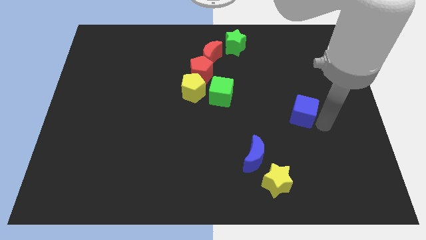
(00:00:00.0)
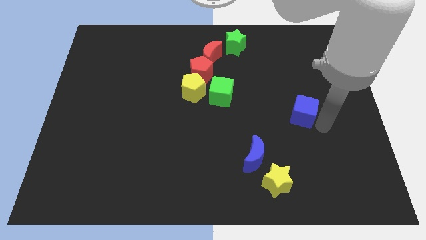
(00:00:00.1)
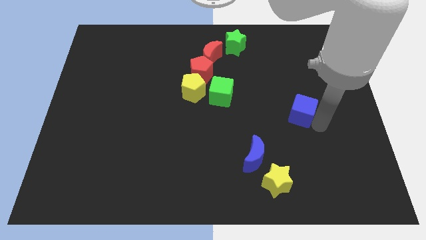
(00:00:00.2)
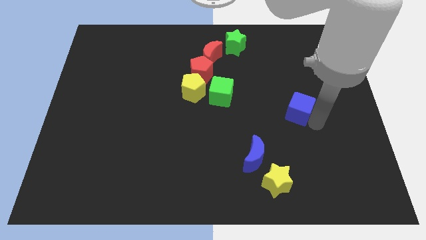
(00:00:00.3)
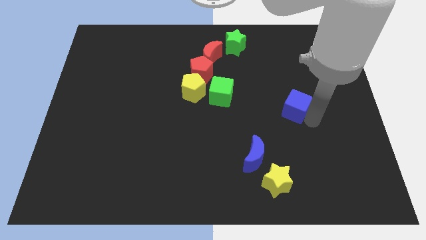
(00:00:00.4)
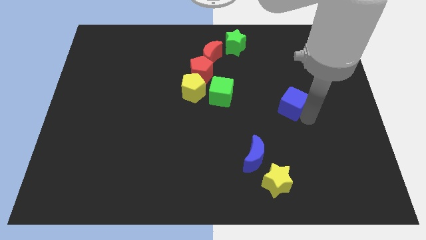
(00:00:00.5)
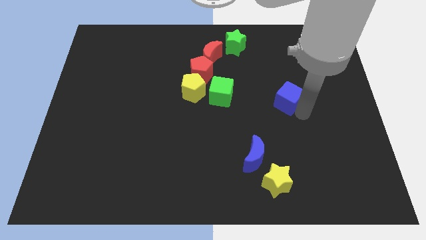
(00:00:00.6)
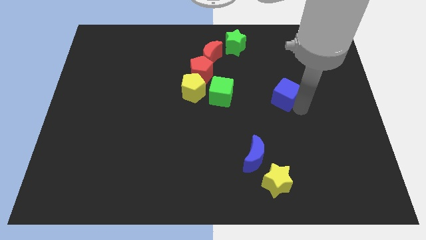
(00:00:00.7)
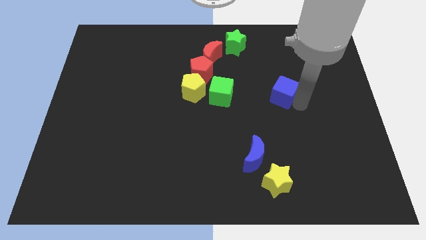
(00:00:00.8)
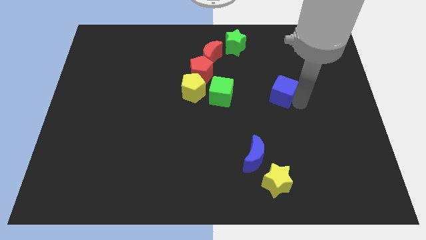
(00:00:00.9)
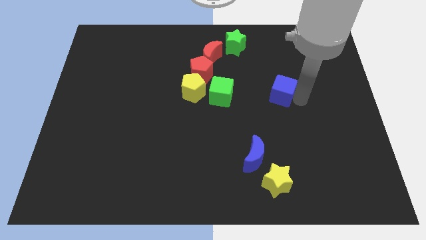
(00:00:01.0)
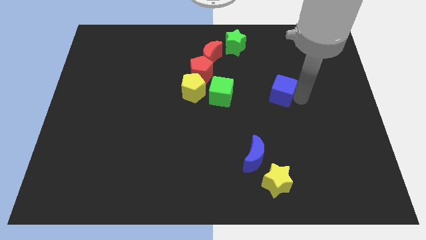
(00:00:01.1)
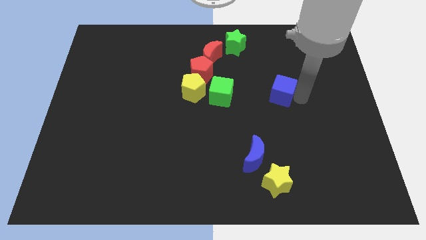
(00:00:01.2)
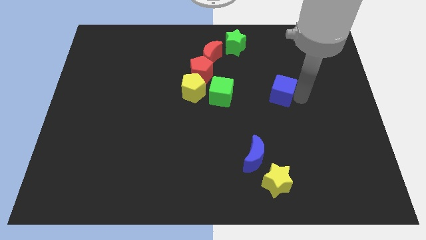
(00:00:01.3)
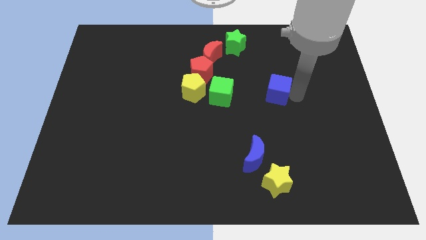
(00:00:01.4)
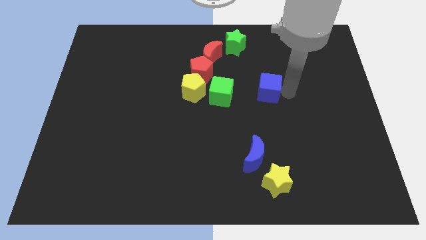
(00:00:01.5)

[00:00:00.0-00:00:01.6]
push the blue cube to the left of the board

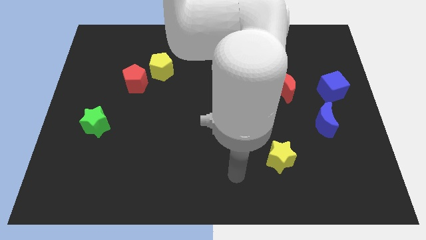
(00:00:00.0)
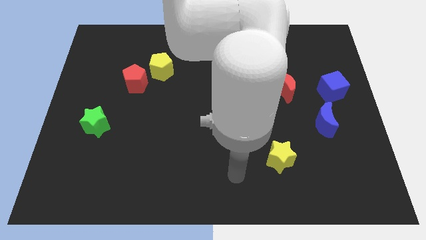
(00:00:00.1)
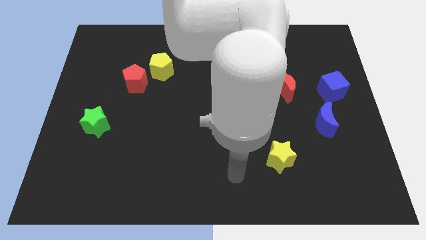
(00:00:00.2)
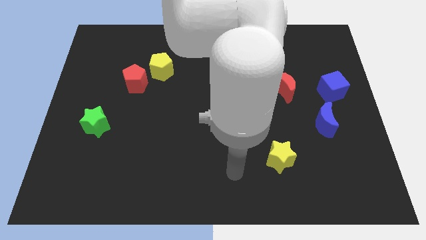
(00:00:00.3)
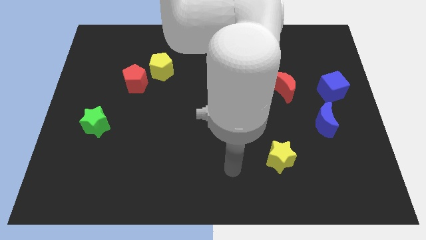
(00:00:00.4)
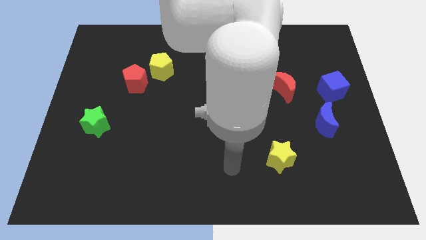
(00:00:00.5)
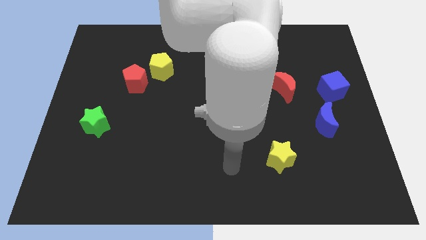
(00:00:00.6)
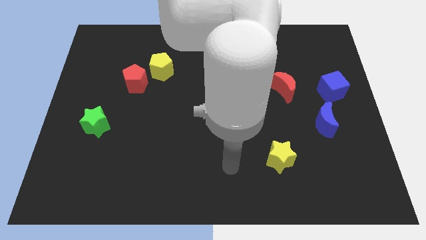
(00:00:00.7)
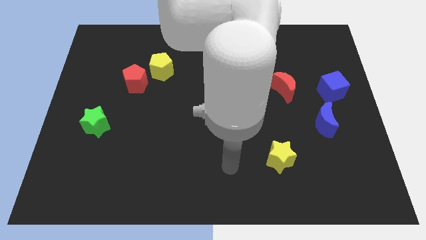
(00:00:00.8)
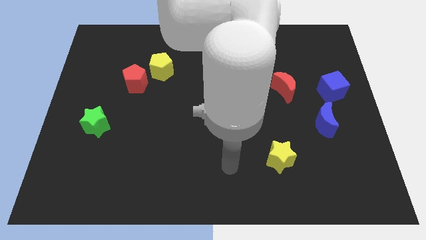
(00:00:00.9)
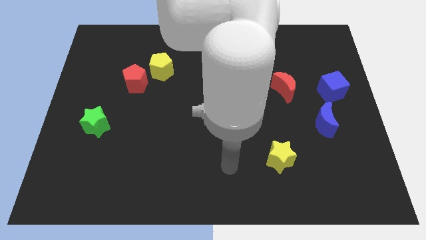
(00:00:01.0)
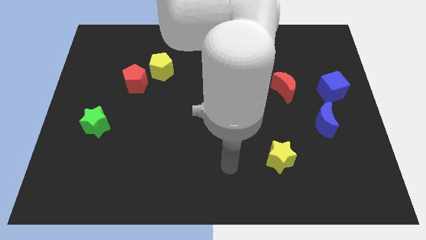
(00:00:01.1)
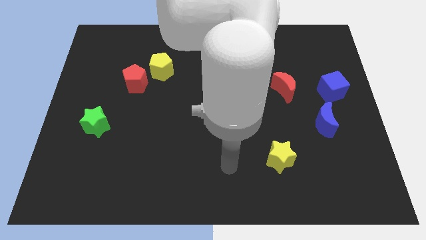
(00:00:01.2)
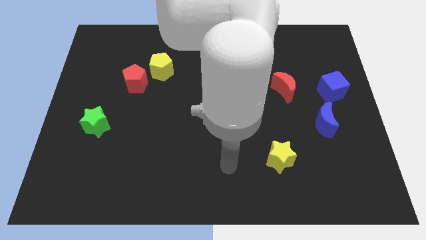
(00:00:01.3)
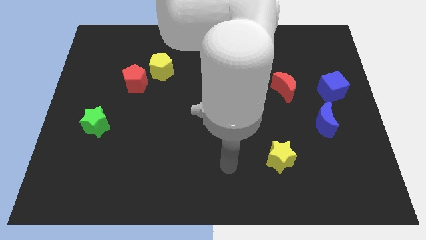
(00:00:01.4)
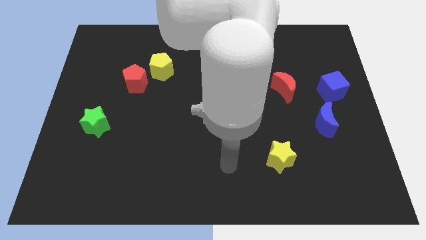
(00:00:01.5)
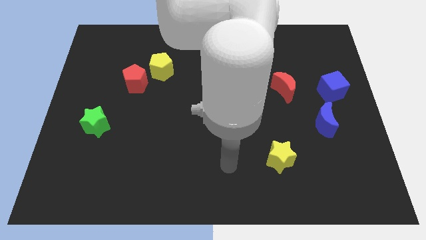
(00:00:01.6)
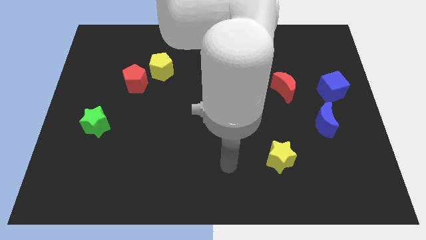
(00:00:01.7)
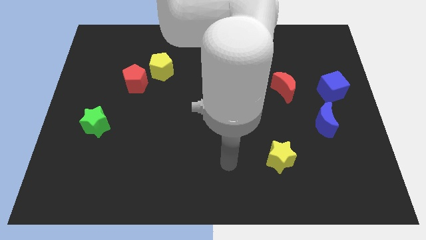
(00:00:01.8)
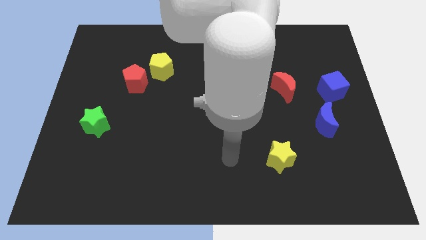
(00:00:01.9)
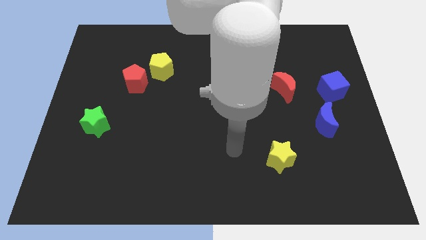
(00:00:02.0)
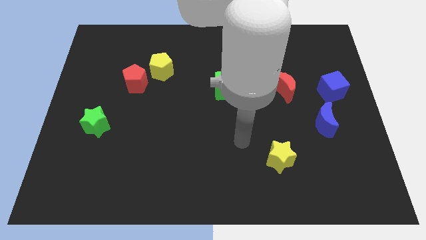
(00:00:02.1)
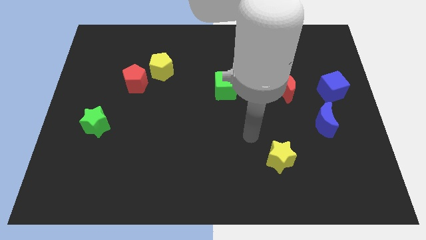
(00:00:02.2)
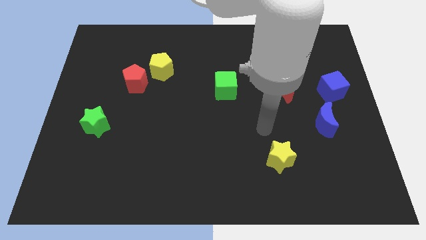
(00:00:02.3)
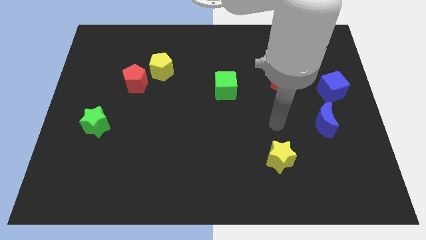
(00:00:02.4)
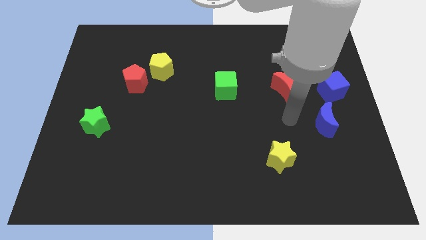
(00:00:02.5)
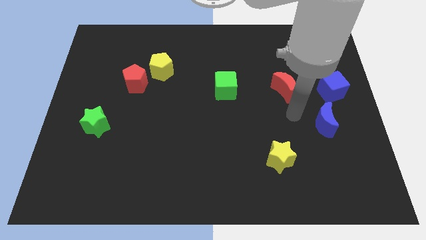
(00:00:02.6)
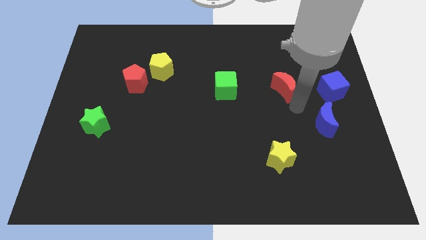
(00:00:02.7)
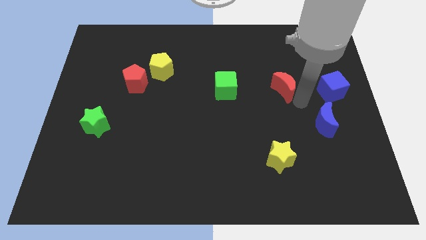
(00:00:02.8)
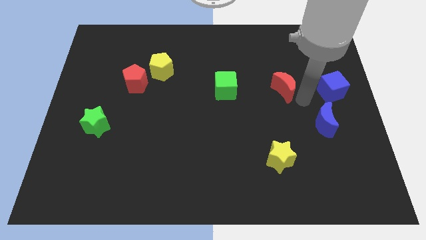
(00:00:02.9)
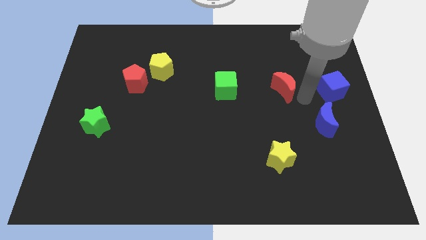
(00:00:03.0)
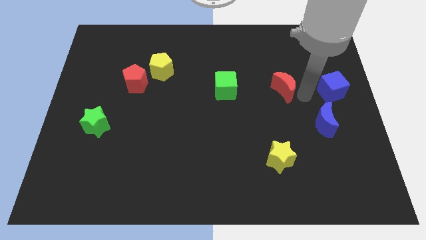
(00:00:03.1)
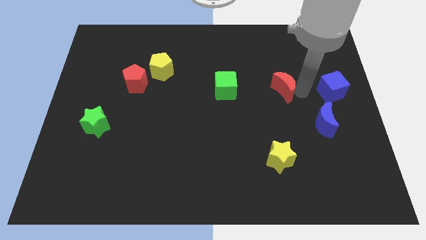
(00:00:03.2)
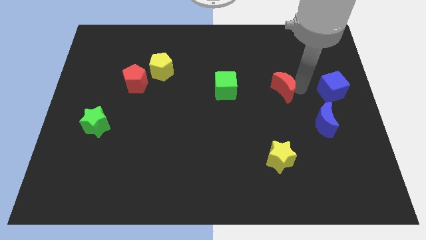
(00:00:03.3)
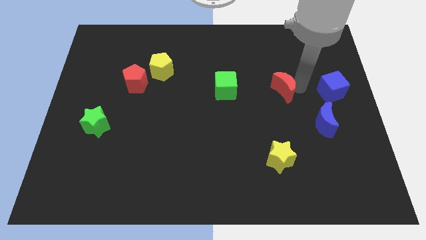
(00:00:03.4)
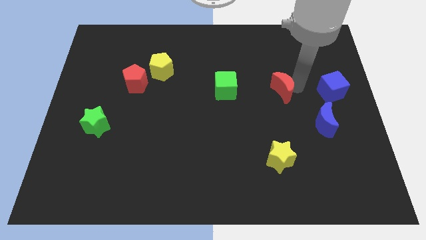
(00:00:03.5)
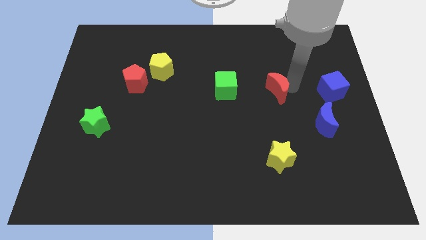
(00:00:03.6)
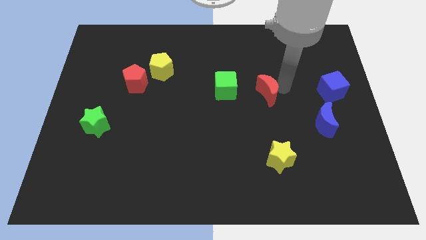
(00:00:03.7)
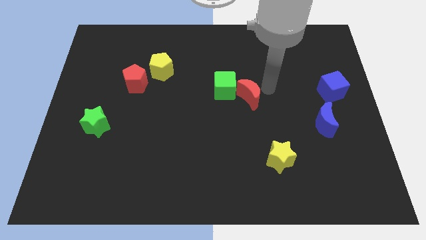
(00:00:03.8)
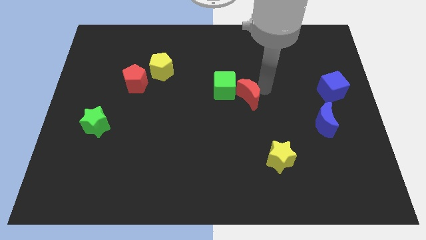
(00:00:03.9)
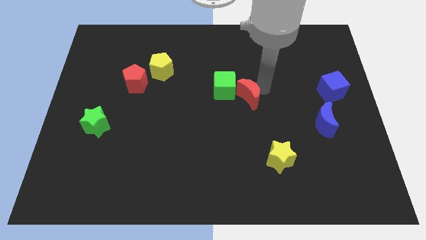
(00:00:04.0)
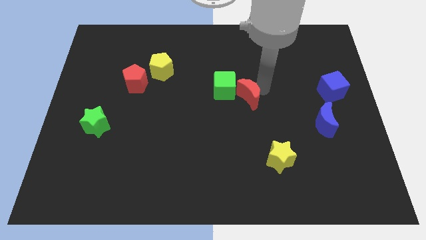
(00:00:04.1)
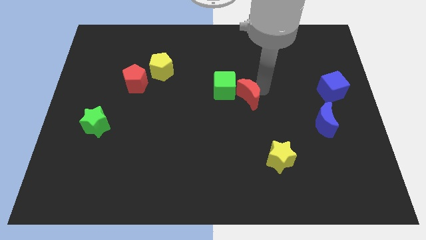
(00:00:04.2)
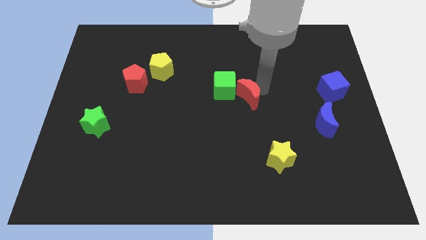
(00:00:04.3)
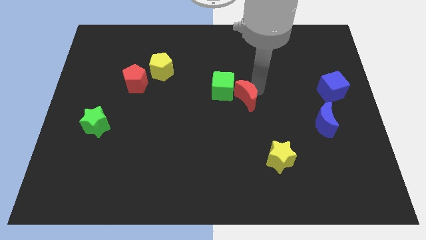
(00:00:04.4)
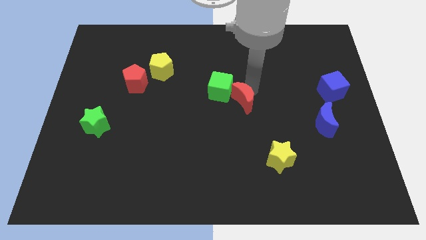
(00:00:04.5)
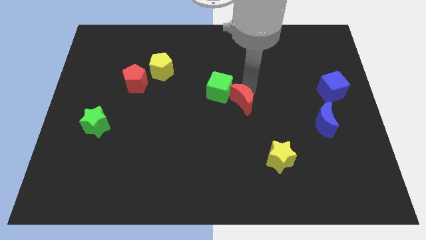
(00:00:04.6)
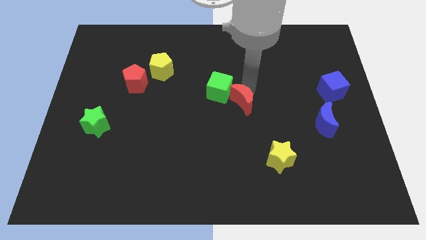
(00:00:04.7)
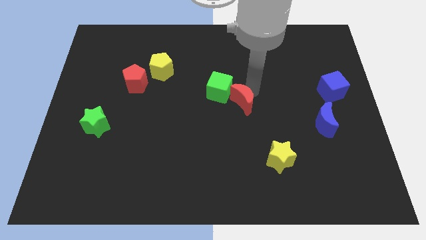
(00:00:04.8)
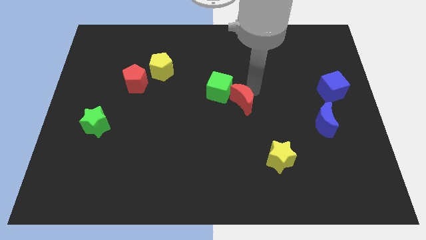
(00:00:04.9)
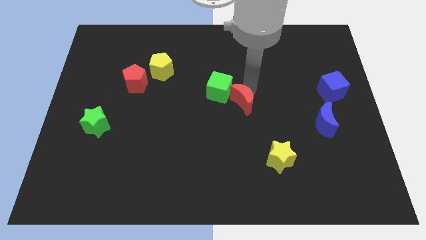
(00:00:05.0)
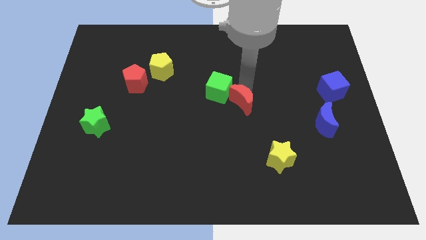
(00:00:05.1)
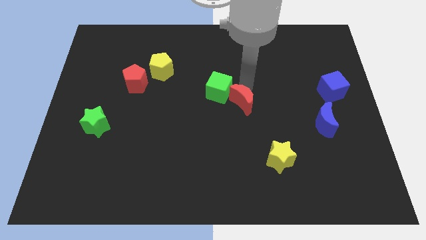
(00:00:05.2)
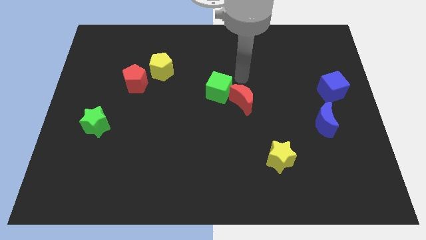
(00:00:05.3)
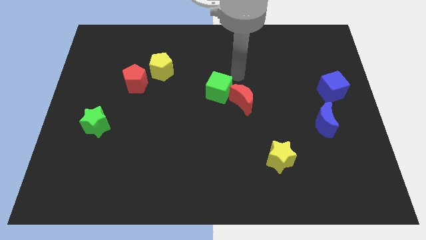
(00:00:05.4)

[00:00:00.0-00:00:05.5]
move the red moon close to the green cube

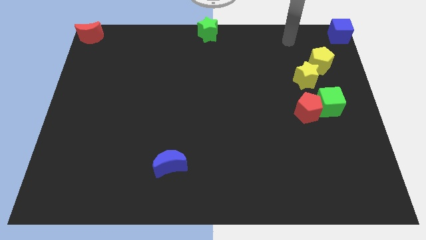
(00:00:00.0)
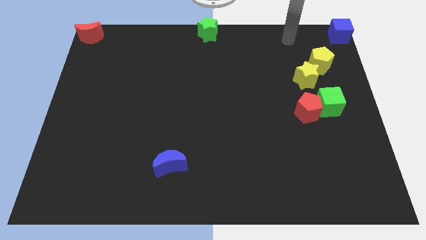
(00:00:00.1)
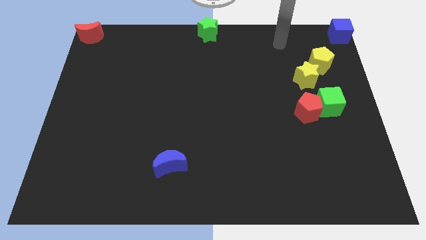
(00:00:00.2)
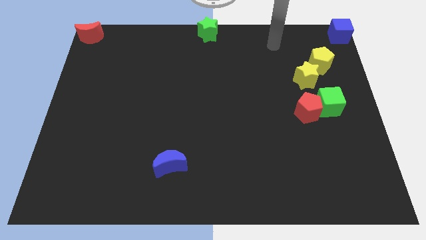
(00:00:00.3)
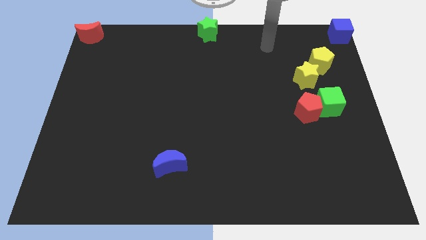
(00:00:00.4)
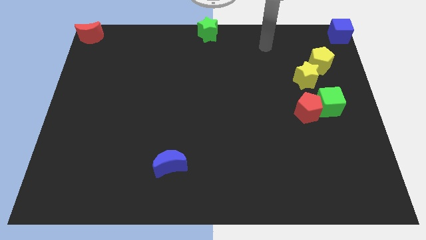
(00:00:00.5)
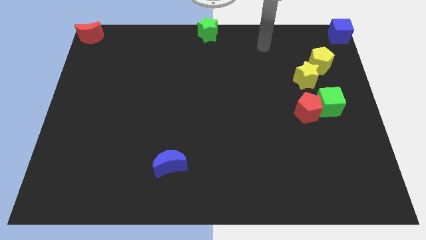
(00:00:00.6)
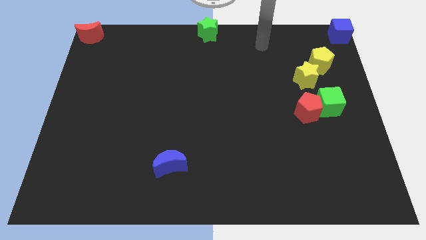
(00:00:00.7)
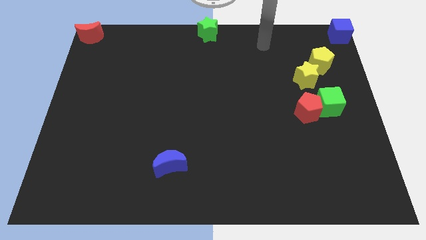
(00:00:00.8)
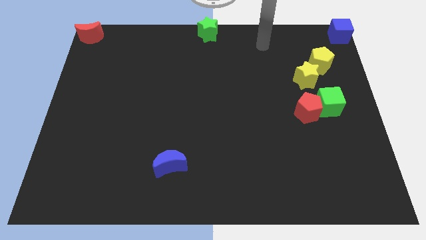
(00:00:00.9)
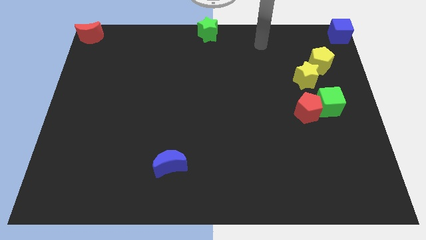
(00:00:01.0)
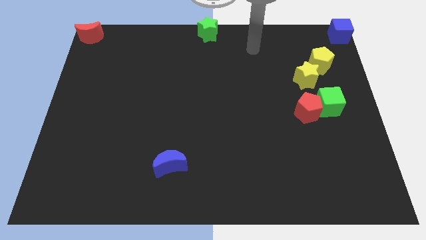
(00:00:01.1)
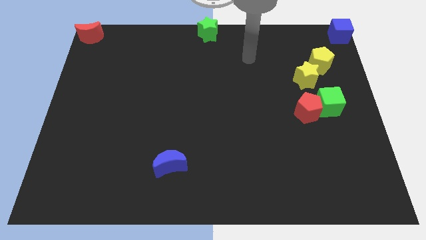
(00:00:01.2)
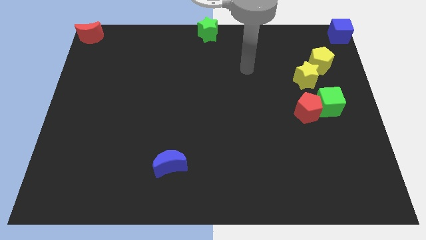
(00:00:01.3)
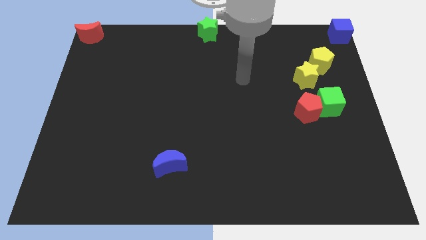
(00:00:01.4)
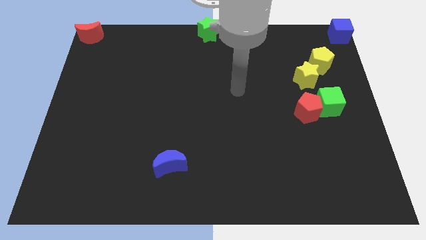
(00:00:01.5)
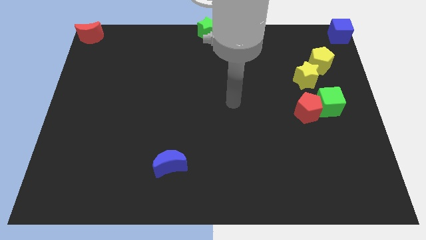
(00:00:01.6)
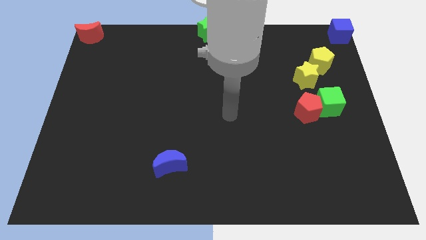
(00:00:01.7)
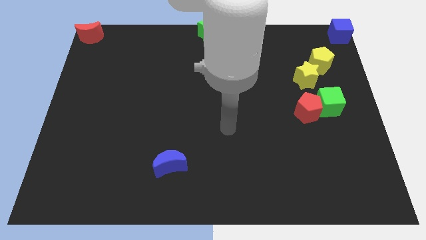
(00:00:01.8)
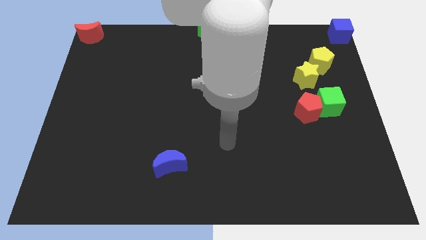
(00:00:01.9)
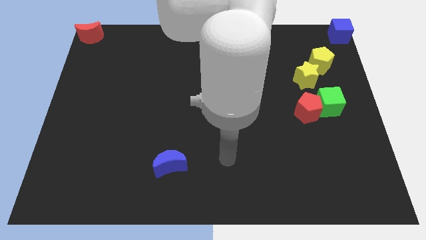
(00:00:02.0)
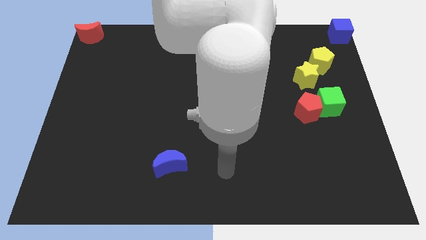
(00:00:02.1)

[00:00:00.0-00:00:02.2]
go to the right side of the blue crescent
